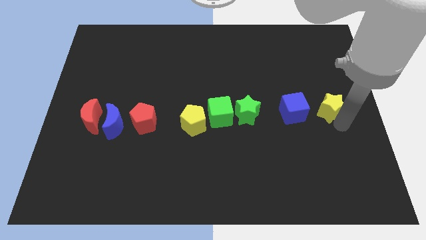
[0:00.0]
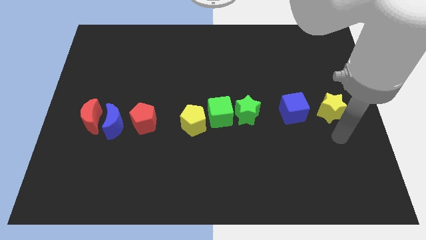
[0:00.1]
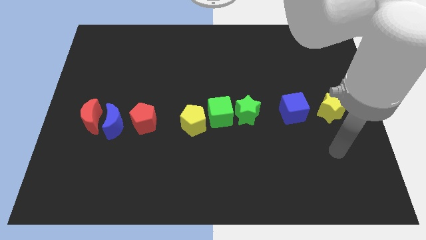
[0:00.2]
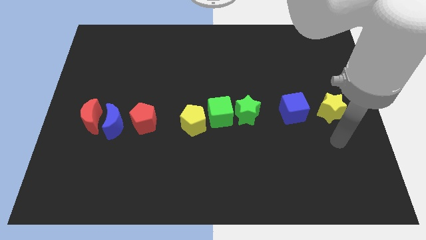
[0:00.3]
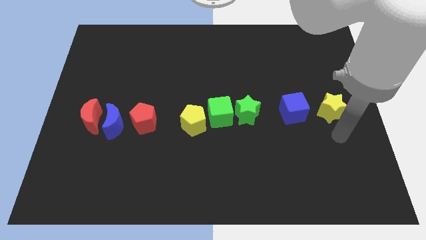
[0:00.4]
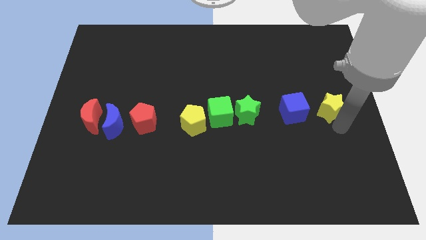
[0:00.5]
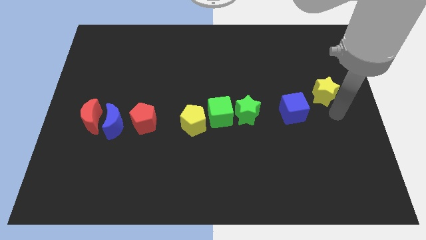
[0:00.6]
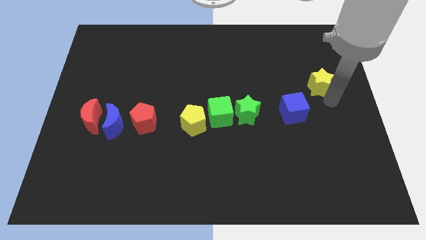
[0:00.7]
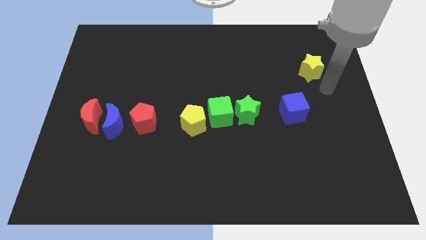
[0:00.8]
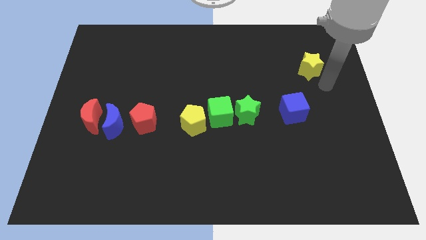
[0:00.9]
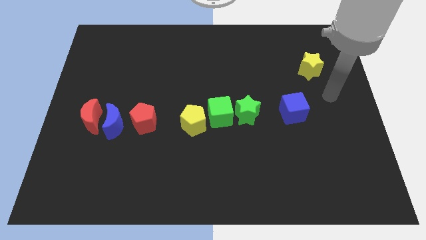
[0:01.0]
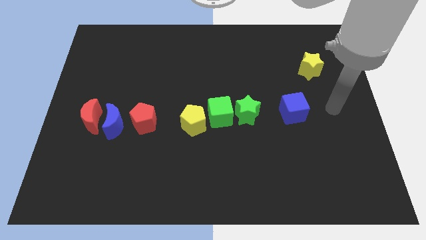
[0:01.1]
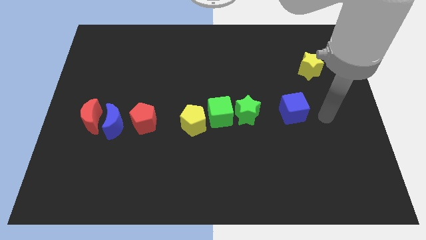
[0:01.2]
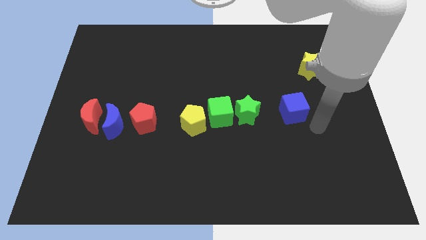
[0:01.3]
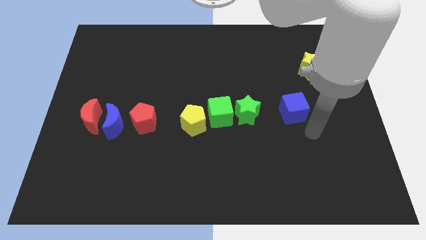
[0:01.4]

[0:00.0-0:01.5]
move the yellow star towards the top side

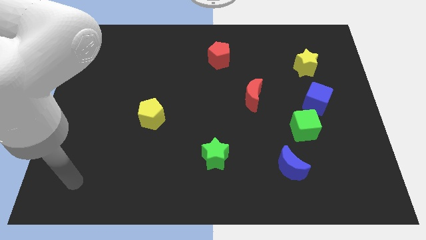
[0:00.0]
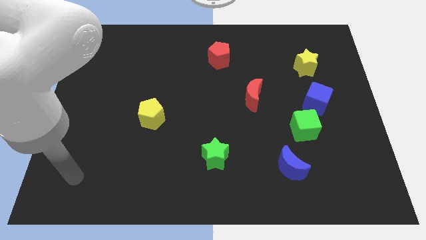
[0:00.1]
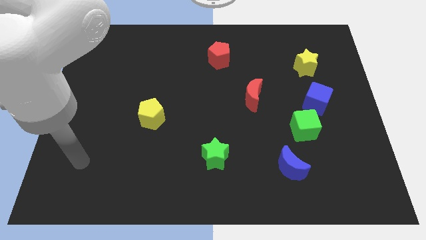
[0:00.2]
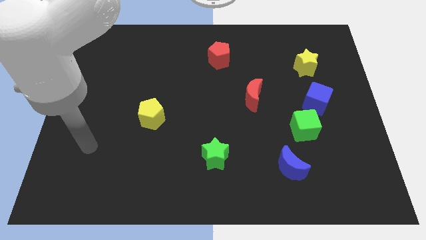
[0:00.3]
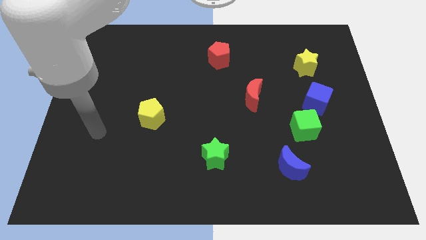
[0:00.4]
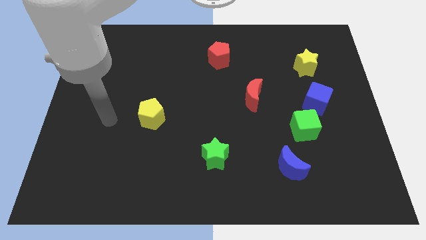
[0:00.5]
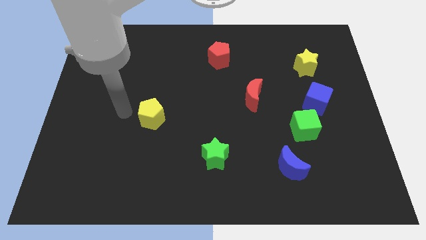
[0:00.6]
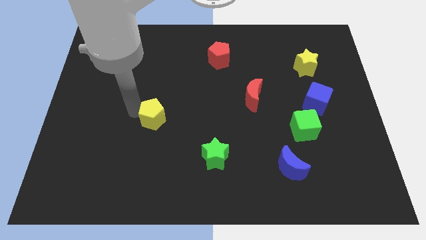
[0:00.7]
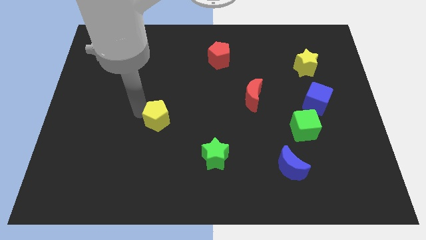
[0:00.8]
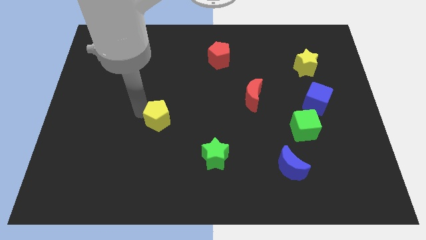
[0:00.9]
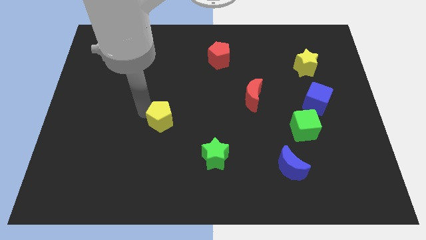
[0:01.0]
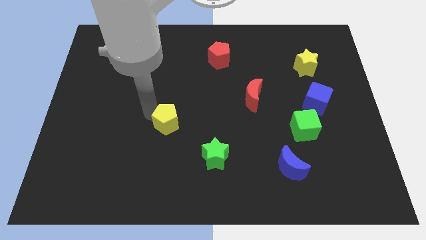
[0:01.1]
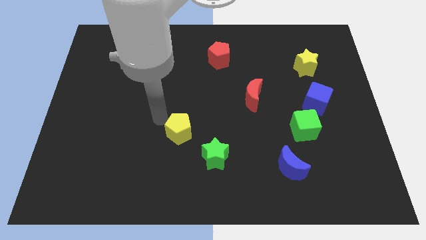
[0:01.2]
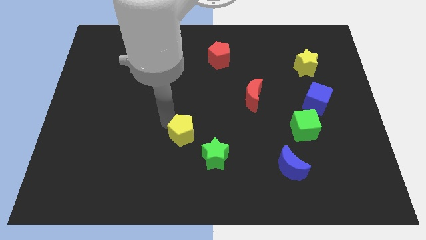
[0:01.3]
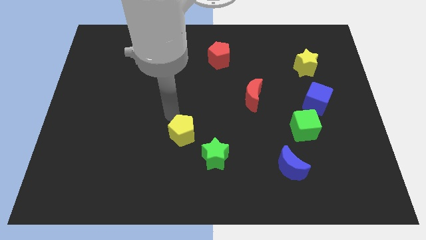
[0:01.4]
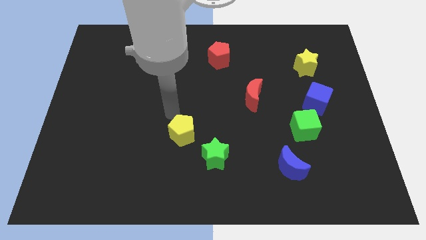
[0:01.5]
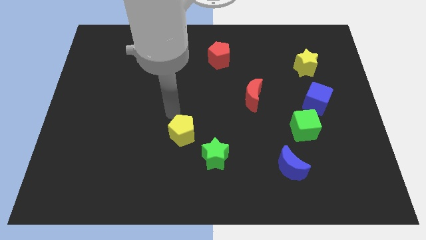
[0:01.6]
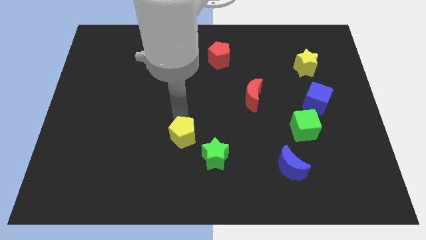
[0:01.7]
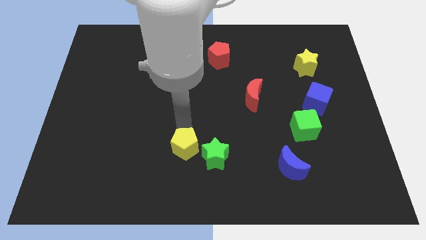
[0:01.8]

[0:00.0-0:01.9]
place the yellow pentagon close to the green star

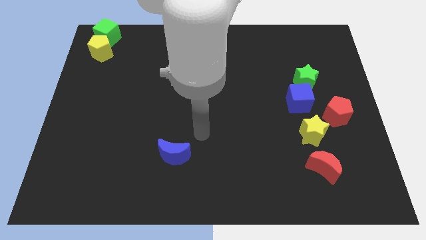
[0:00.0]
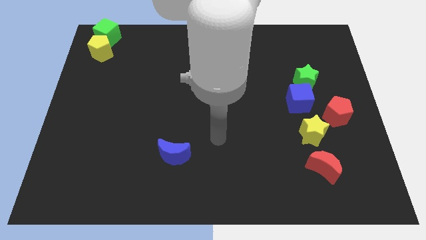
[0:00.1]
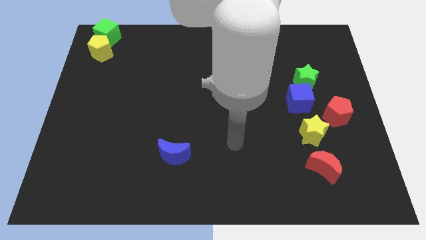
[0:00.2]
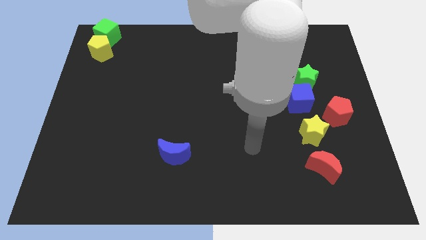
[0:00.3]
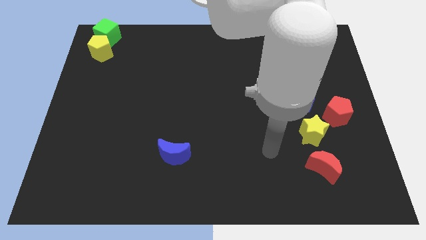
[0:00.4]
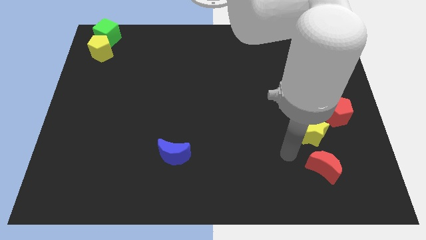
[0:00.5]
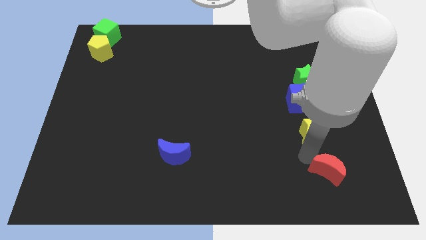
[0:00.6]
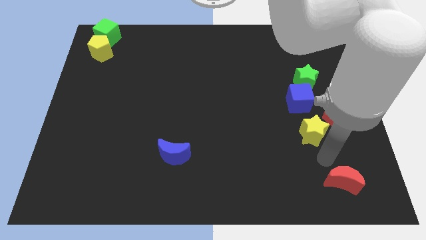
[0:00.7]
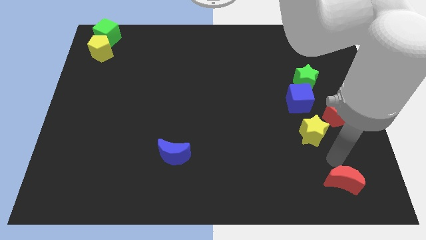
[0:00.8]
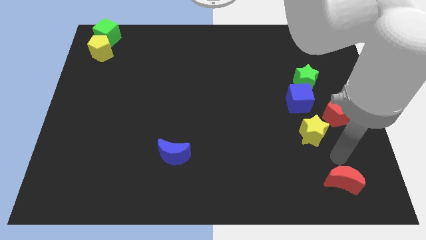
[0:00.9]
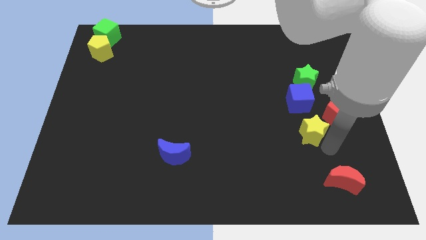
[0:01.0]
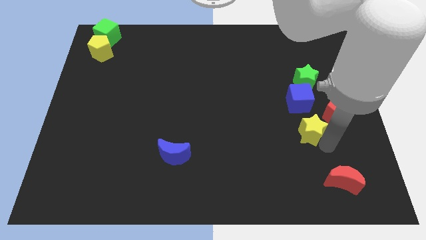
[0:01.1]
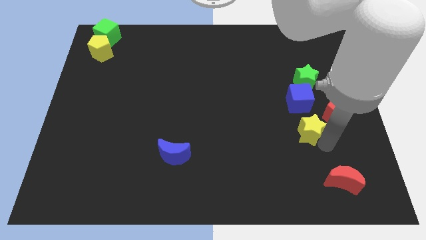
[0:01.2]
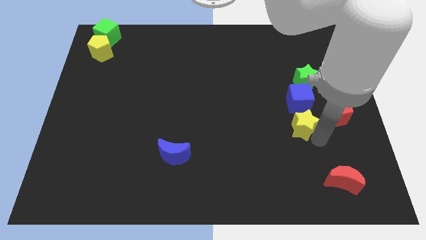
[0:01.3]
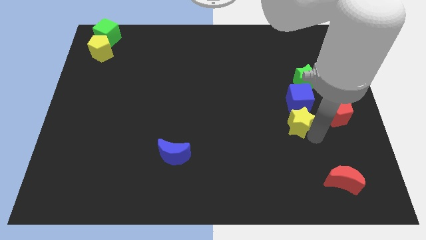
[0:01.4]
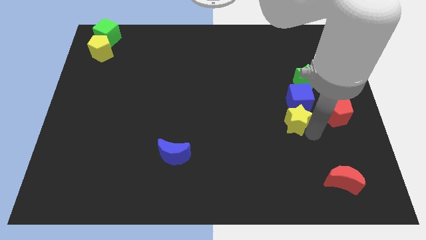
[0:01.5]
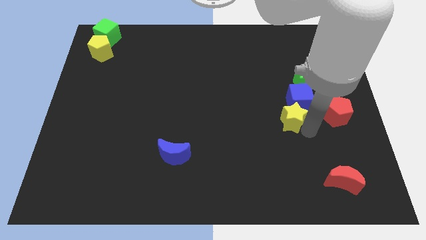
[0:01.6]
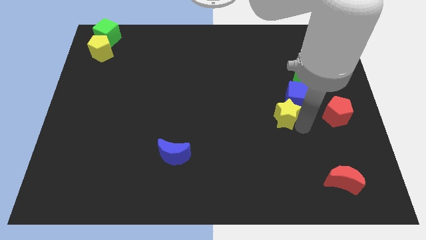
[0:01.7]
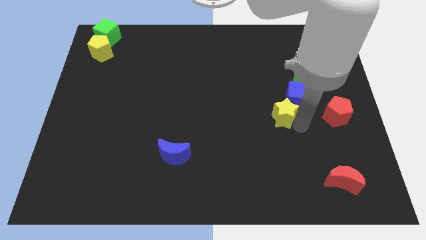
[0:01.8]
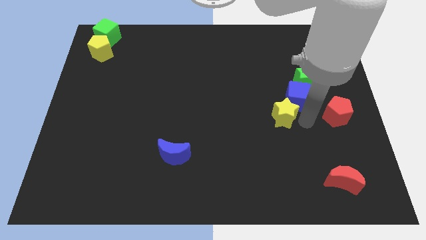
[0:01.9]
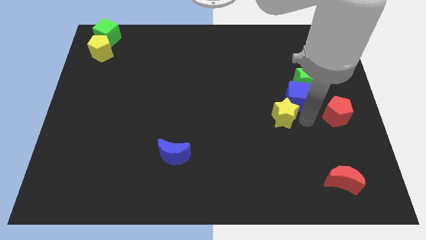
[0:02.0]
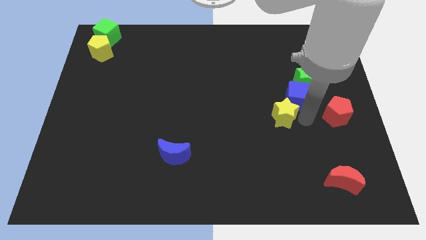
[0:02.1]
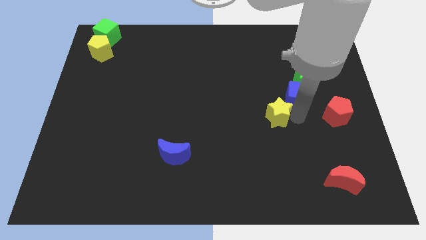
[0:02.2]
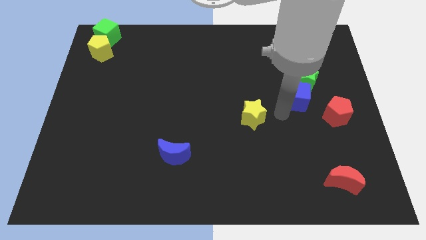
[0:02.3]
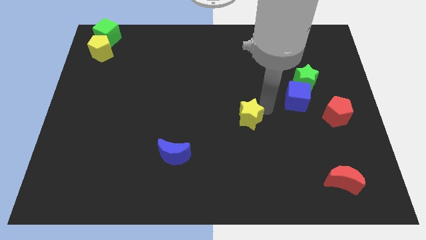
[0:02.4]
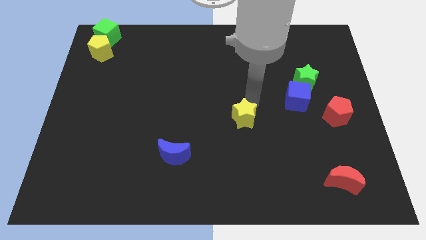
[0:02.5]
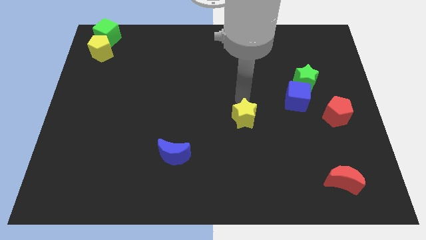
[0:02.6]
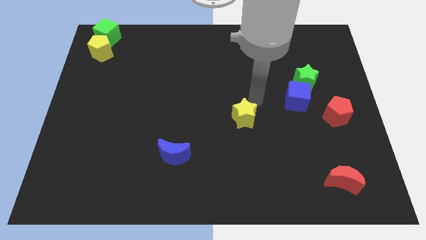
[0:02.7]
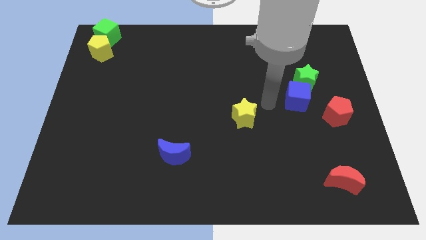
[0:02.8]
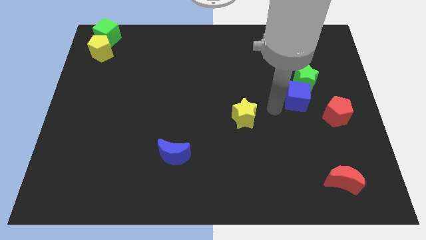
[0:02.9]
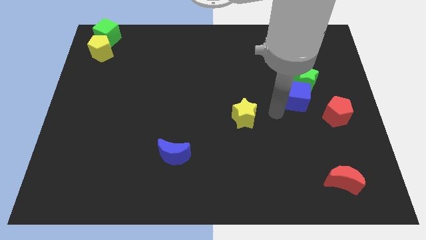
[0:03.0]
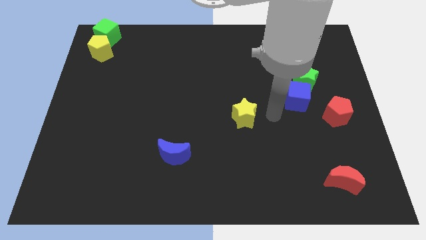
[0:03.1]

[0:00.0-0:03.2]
put the yellow star in between the blue cube and the blue crescent

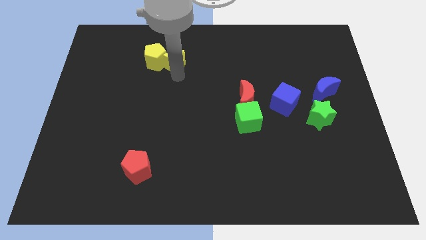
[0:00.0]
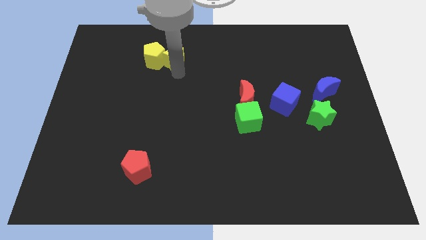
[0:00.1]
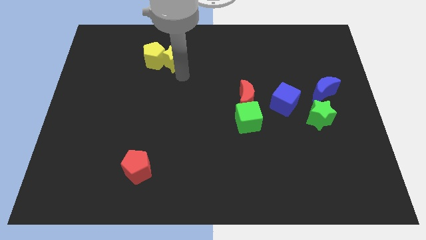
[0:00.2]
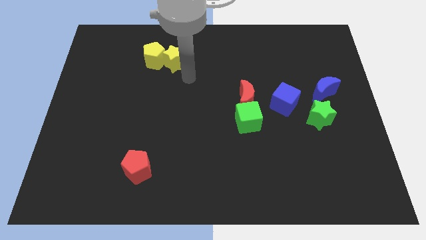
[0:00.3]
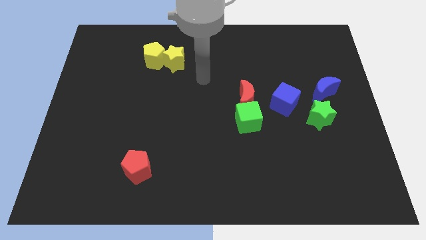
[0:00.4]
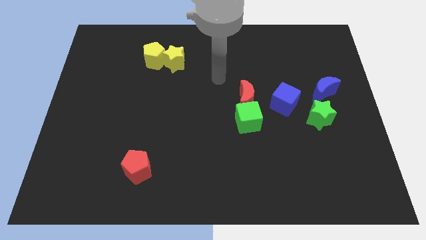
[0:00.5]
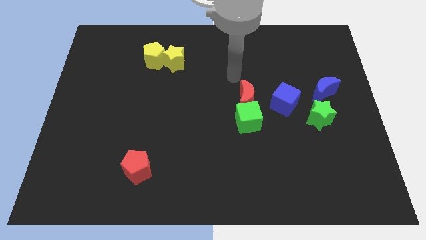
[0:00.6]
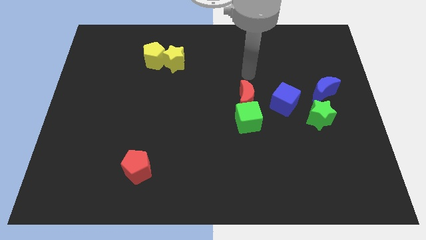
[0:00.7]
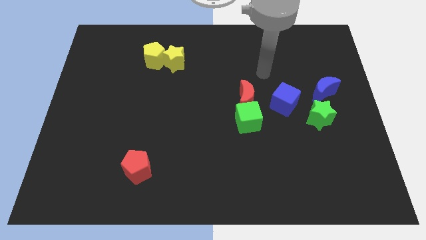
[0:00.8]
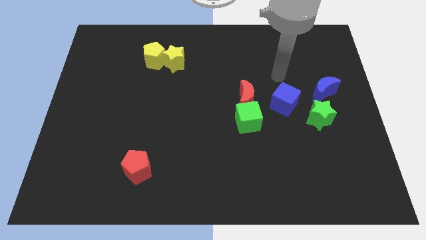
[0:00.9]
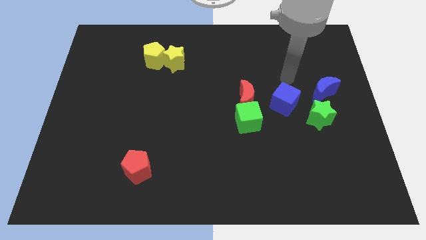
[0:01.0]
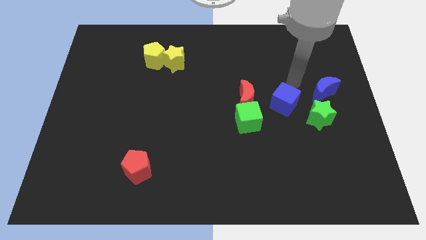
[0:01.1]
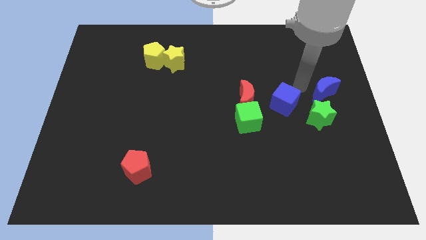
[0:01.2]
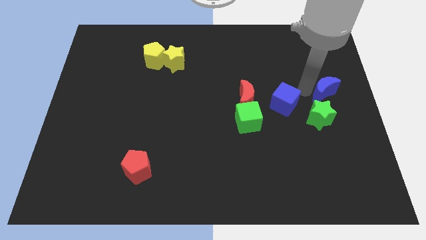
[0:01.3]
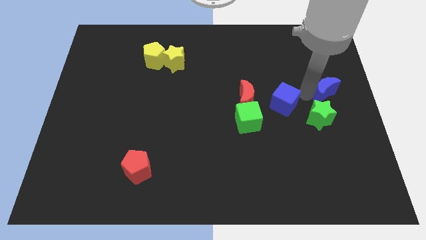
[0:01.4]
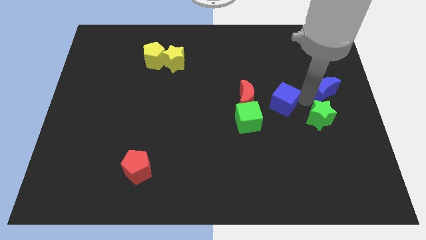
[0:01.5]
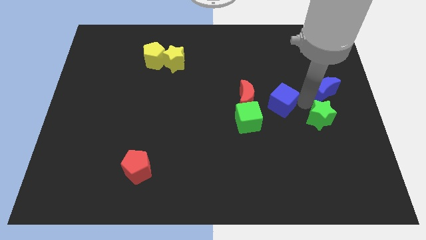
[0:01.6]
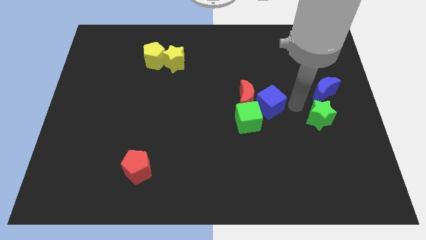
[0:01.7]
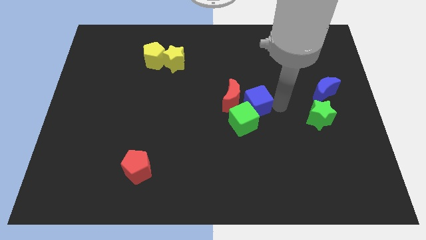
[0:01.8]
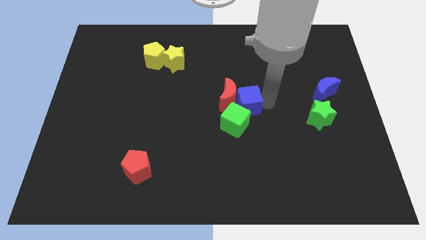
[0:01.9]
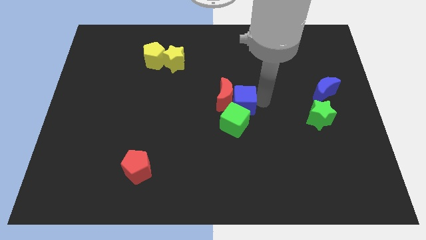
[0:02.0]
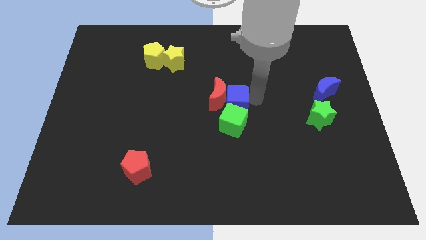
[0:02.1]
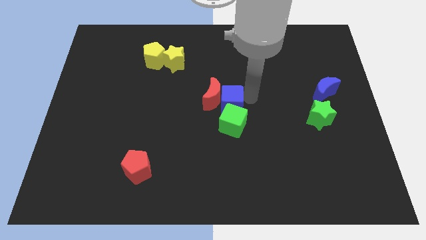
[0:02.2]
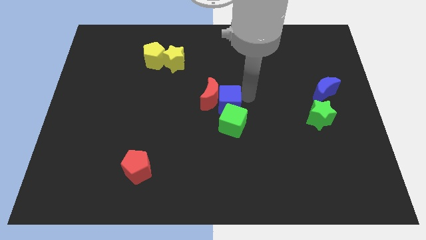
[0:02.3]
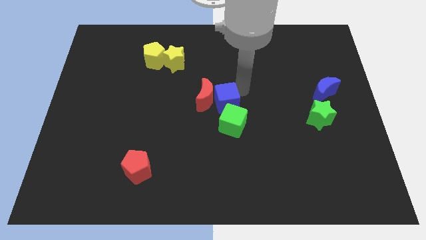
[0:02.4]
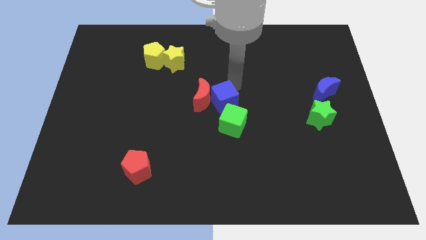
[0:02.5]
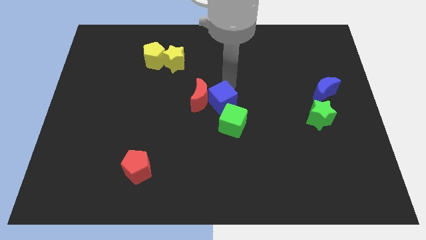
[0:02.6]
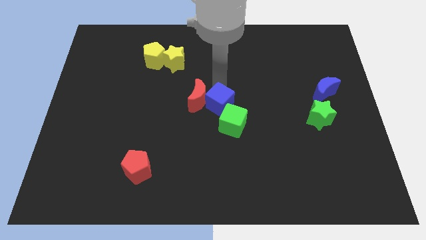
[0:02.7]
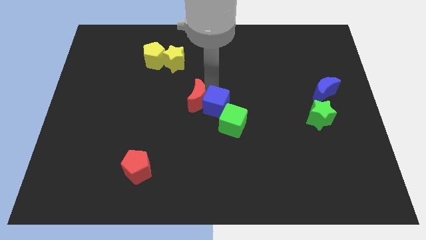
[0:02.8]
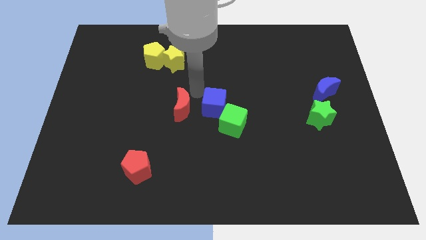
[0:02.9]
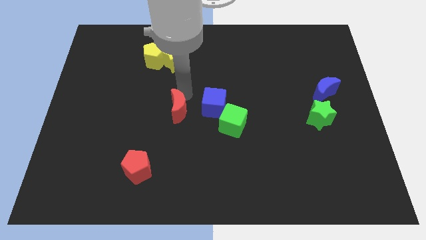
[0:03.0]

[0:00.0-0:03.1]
push the blue cube into the red crescent towards the left
